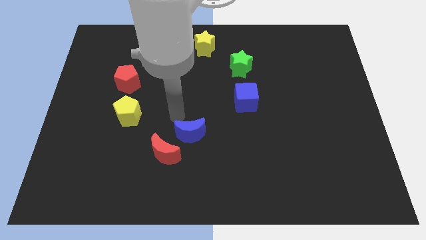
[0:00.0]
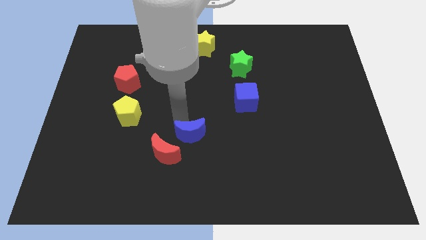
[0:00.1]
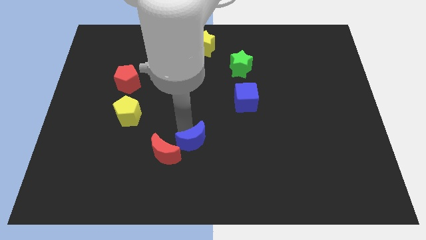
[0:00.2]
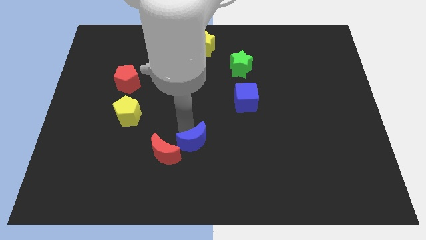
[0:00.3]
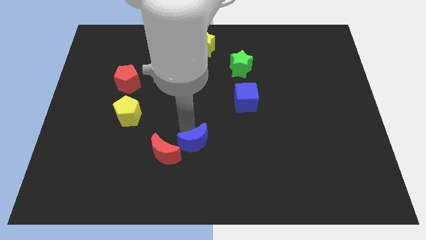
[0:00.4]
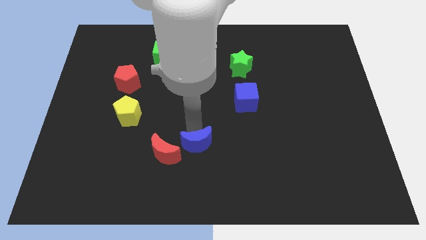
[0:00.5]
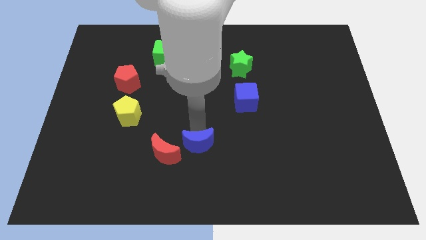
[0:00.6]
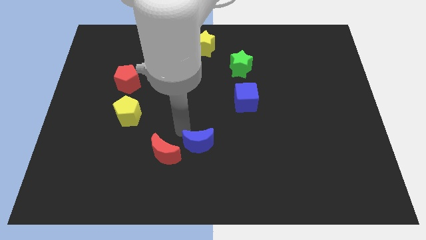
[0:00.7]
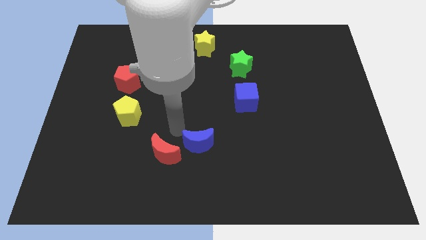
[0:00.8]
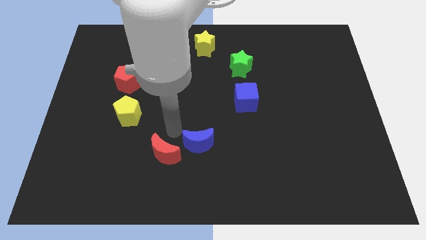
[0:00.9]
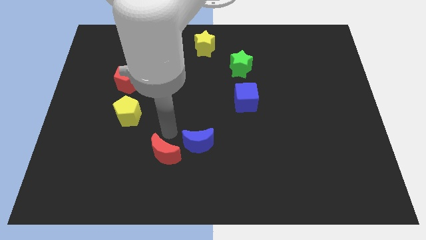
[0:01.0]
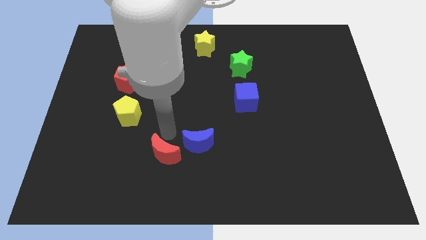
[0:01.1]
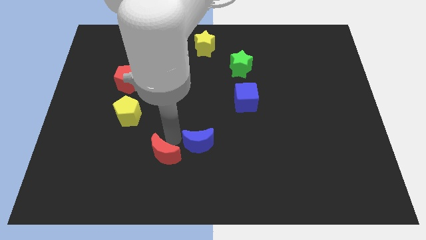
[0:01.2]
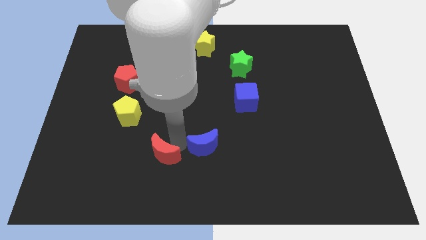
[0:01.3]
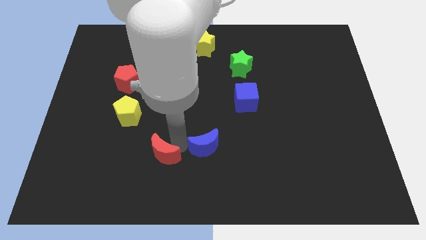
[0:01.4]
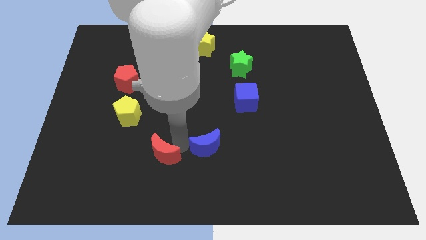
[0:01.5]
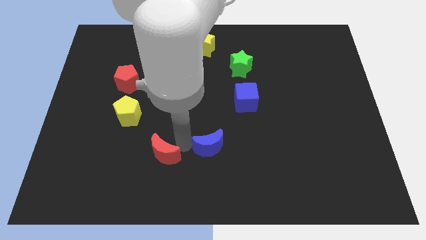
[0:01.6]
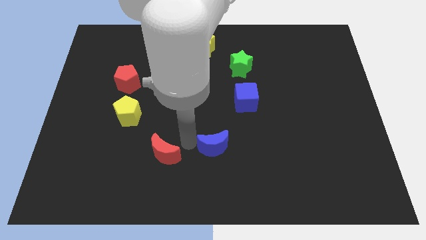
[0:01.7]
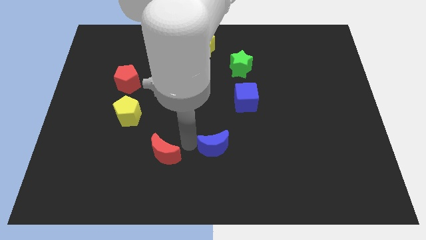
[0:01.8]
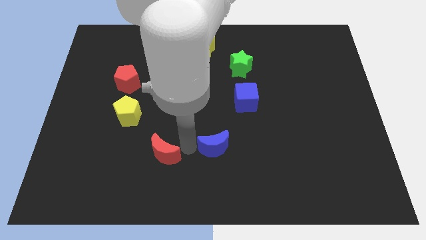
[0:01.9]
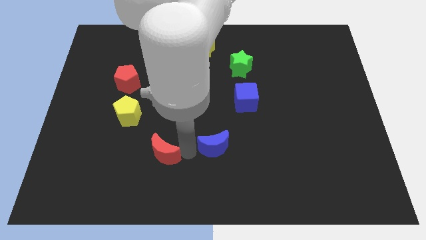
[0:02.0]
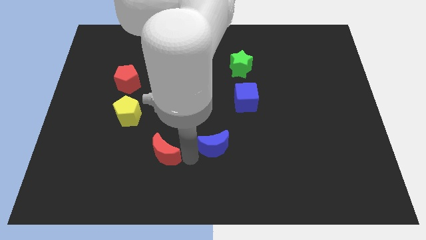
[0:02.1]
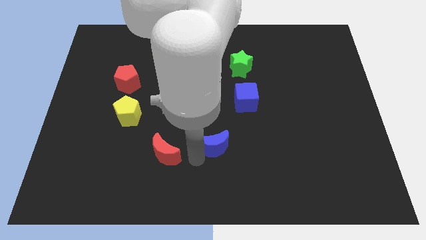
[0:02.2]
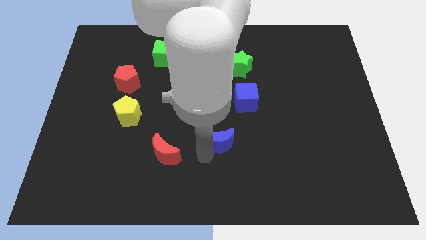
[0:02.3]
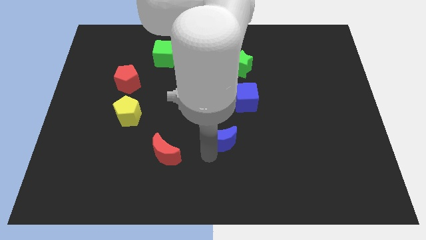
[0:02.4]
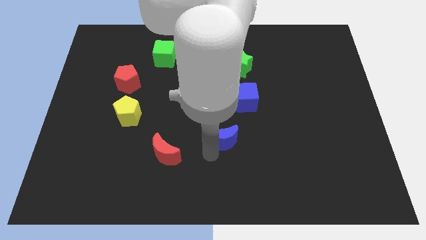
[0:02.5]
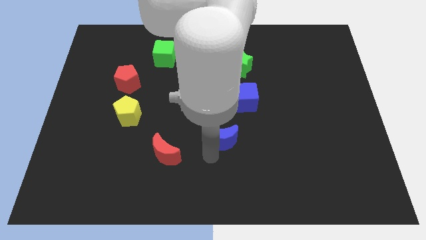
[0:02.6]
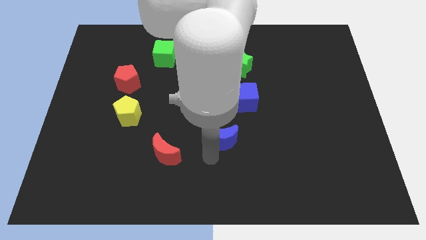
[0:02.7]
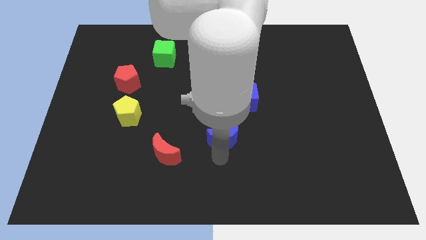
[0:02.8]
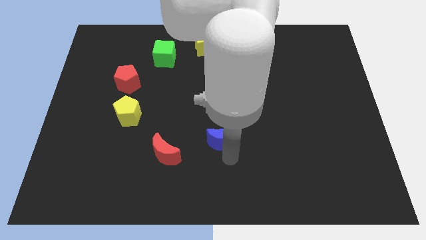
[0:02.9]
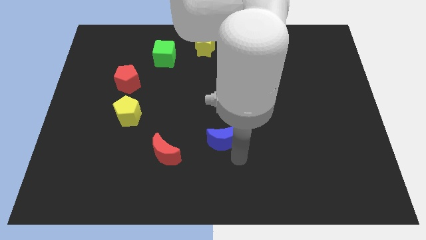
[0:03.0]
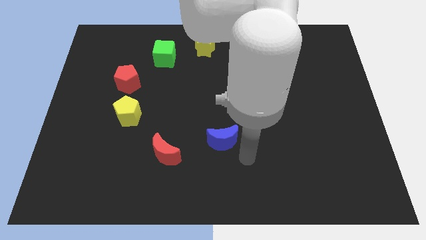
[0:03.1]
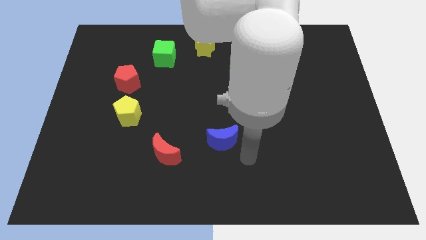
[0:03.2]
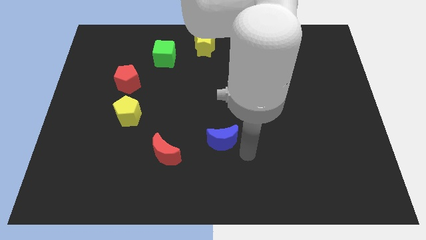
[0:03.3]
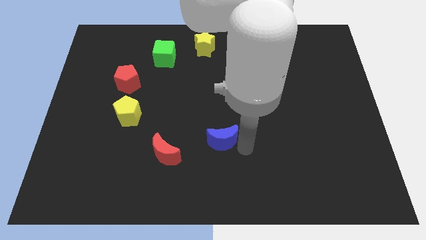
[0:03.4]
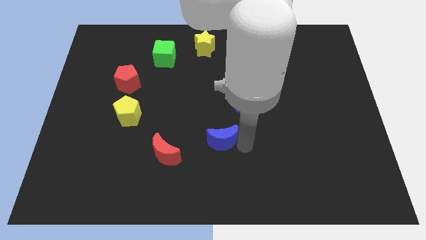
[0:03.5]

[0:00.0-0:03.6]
push the blue crescent slightly to the right

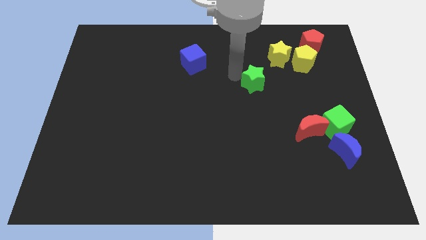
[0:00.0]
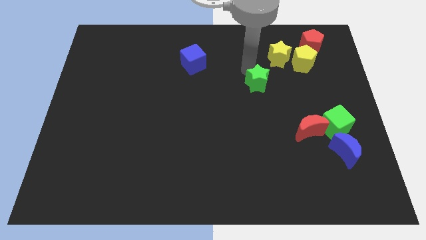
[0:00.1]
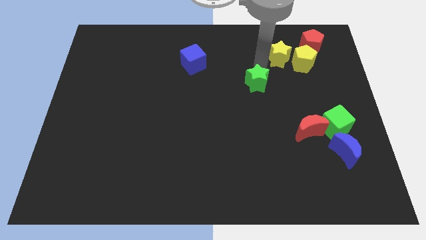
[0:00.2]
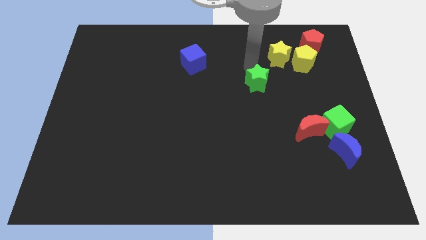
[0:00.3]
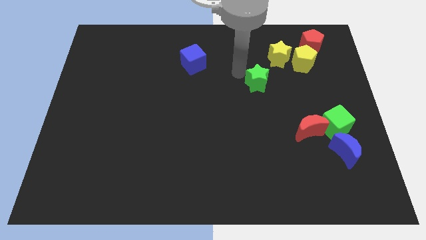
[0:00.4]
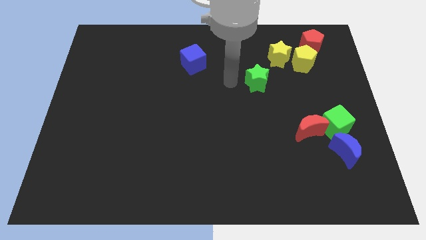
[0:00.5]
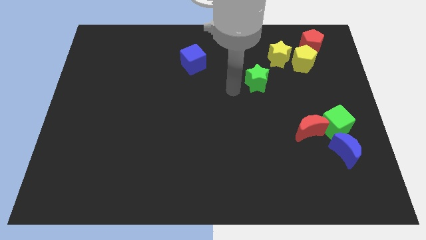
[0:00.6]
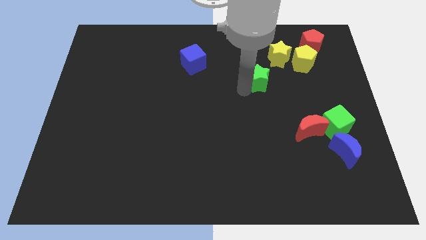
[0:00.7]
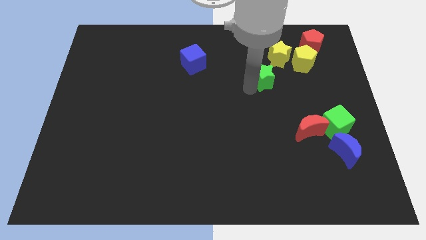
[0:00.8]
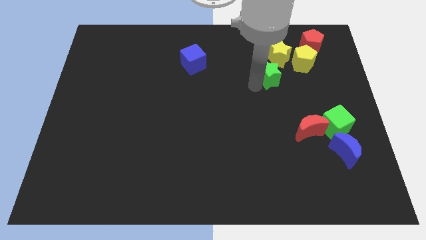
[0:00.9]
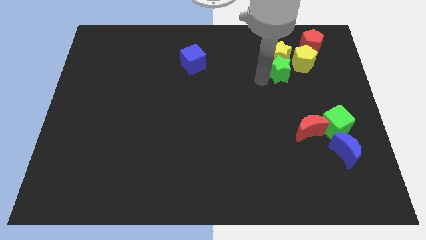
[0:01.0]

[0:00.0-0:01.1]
place green star to the bottom of yellow star

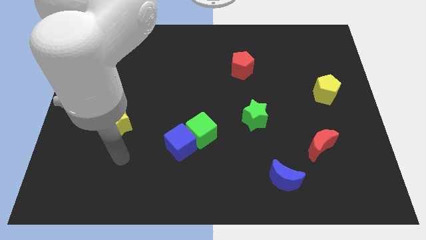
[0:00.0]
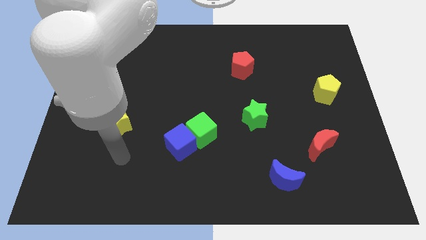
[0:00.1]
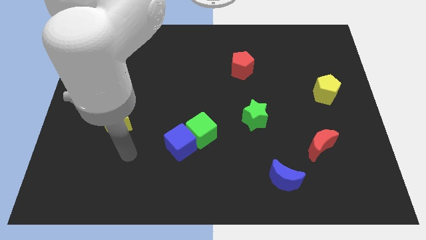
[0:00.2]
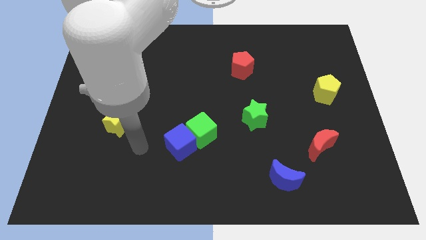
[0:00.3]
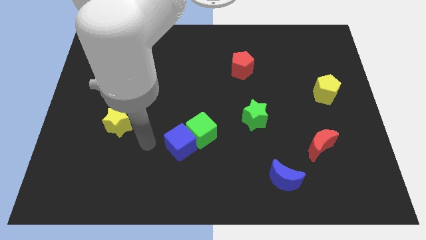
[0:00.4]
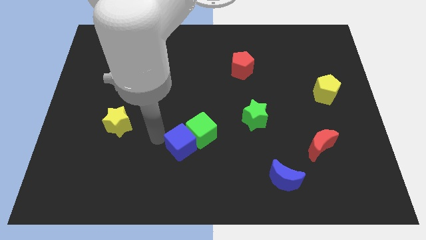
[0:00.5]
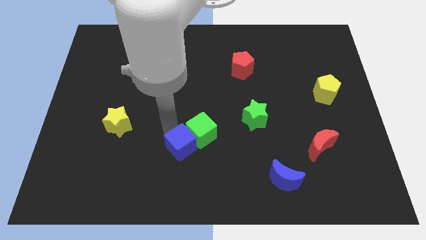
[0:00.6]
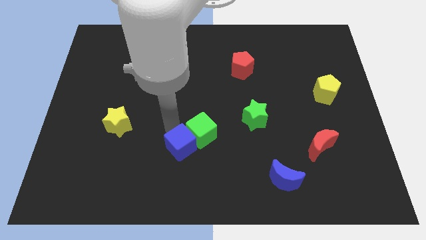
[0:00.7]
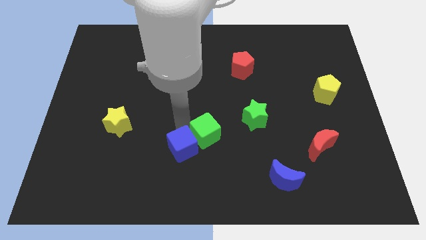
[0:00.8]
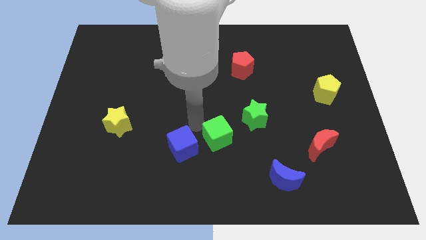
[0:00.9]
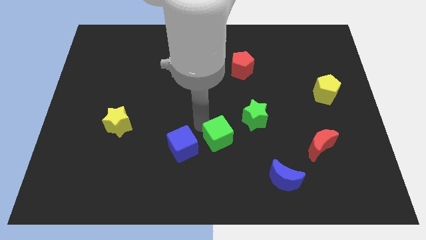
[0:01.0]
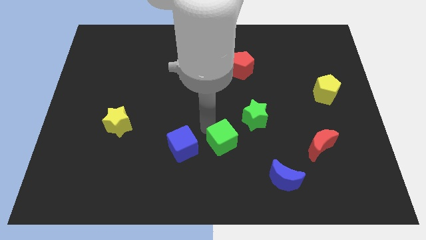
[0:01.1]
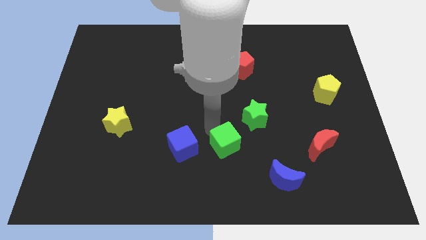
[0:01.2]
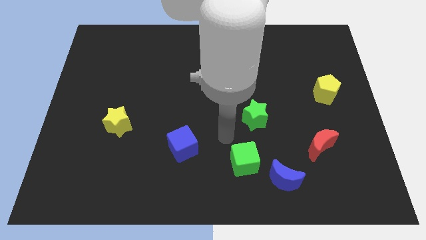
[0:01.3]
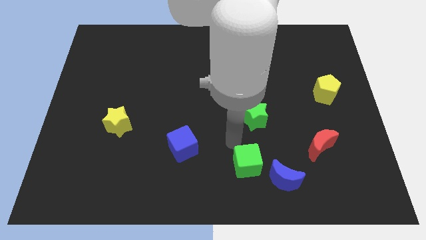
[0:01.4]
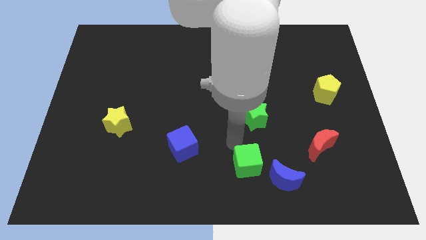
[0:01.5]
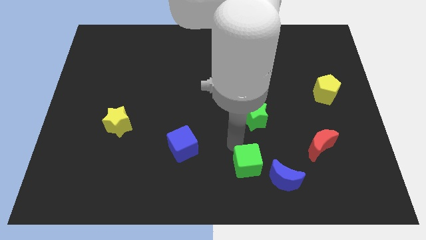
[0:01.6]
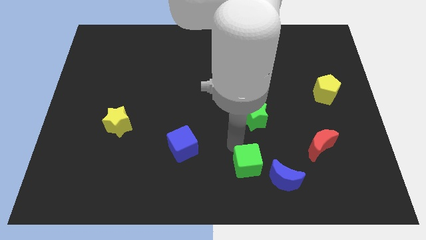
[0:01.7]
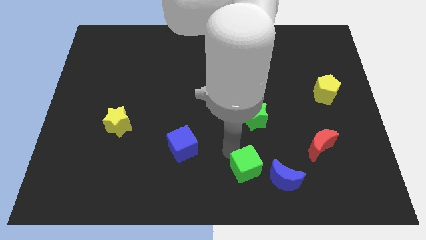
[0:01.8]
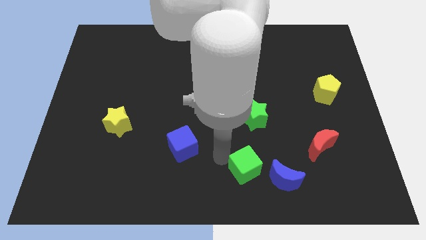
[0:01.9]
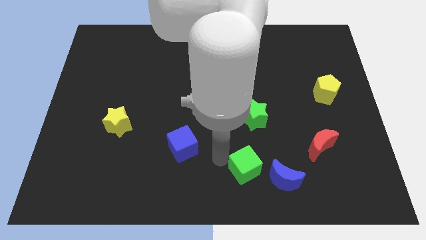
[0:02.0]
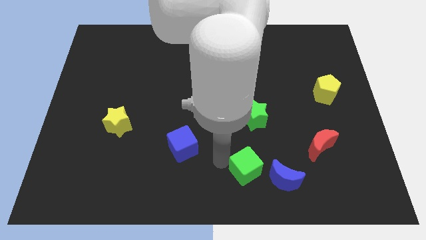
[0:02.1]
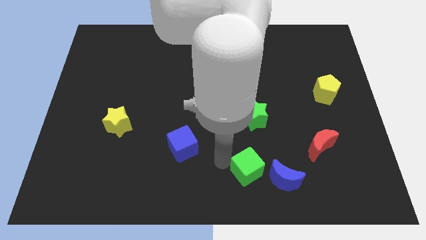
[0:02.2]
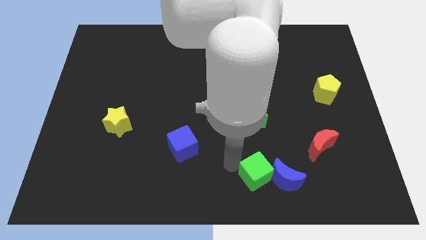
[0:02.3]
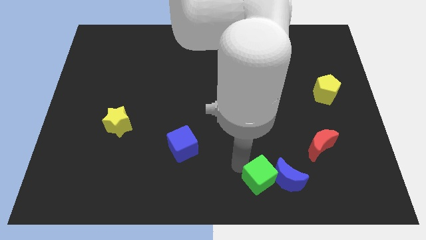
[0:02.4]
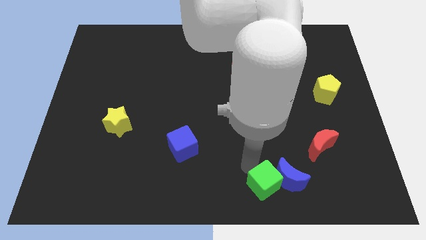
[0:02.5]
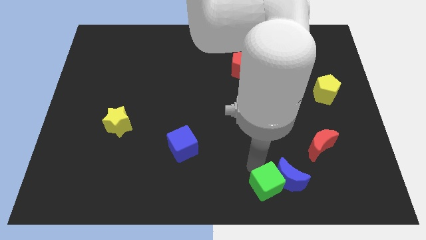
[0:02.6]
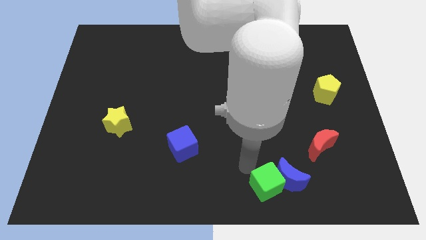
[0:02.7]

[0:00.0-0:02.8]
make the green cube into the blue crescent

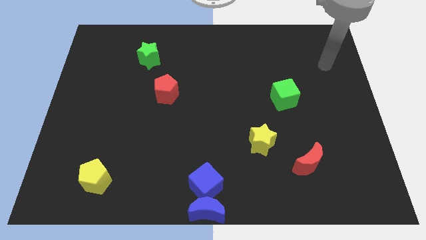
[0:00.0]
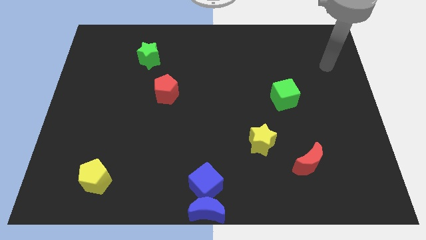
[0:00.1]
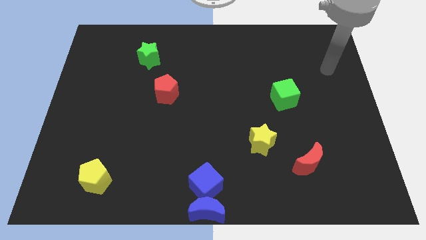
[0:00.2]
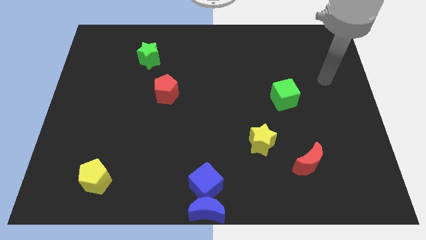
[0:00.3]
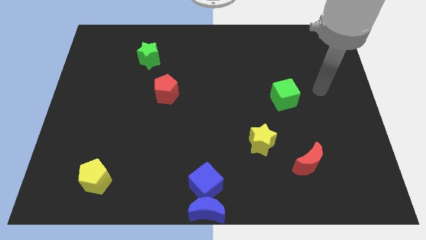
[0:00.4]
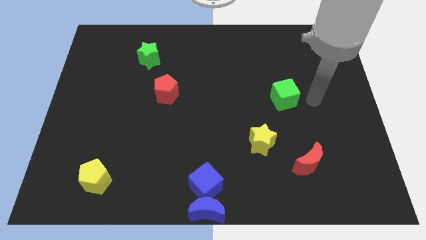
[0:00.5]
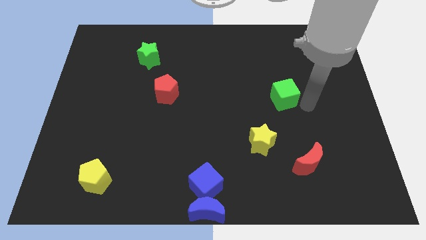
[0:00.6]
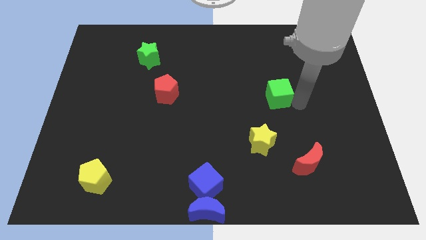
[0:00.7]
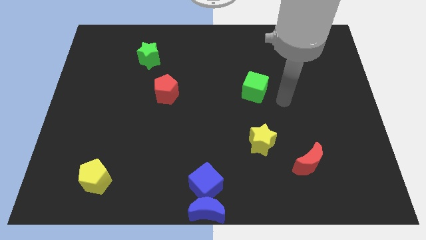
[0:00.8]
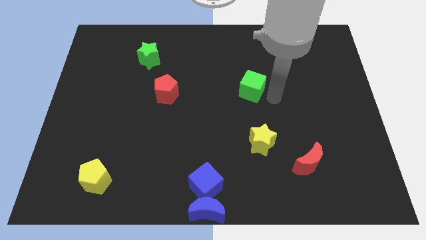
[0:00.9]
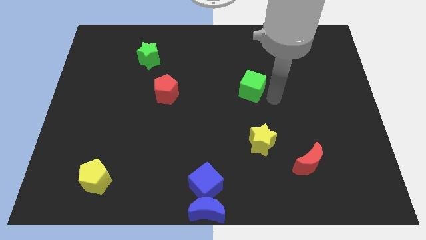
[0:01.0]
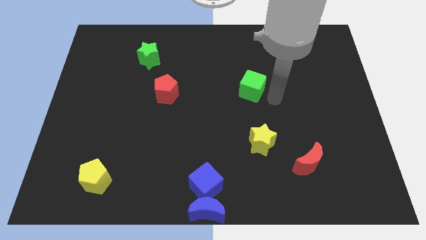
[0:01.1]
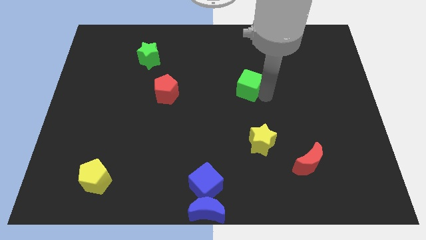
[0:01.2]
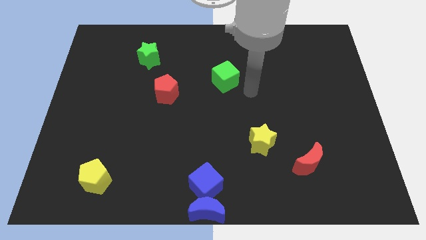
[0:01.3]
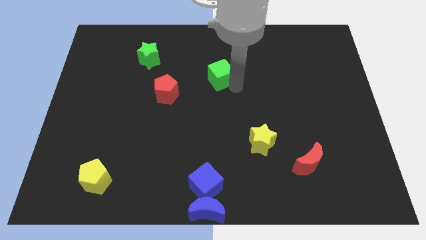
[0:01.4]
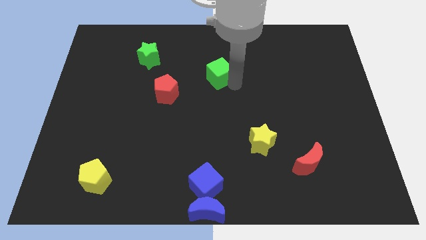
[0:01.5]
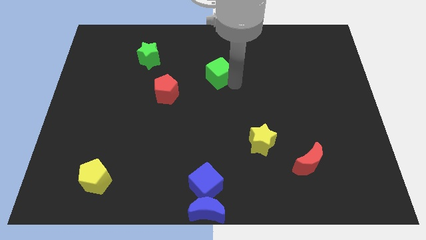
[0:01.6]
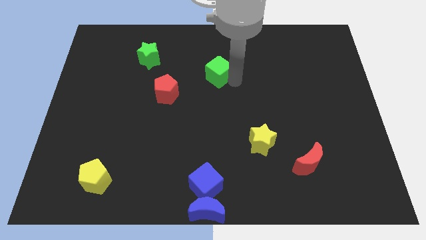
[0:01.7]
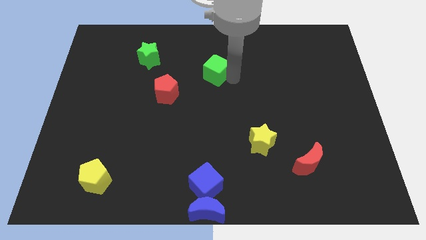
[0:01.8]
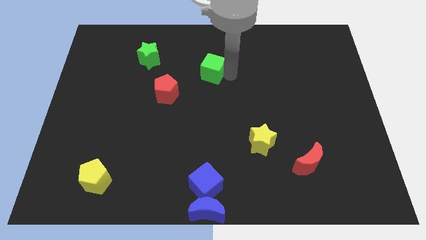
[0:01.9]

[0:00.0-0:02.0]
place the green cube diagonally top right to red pentagon
